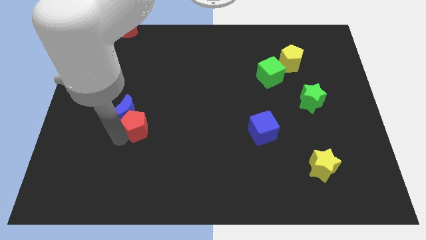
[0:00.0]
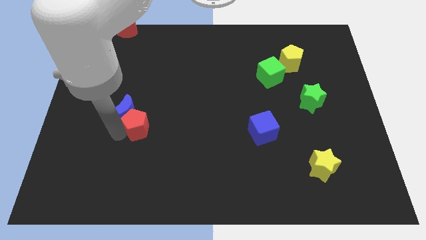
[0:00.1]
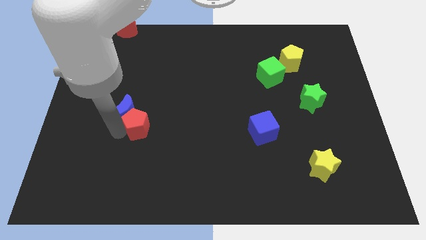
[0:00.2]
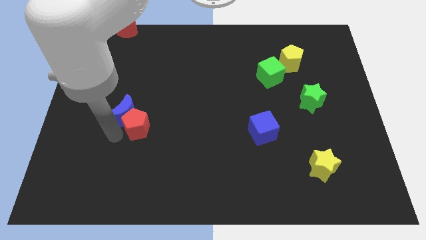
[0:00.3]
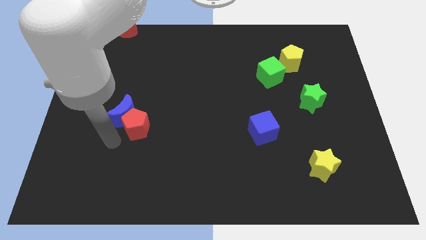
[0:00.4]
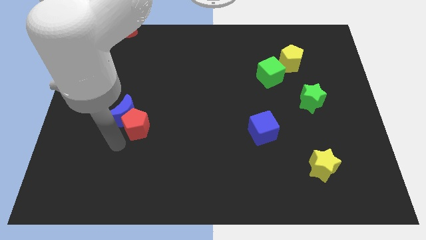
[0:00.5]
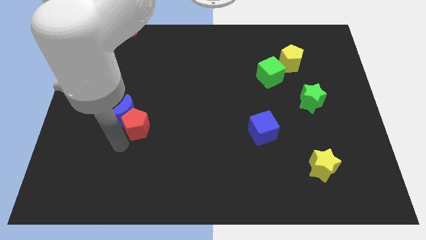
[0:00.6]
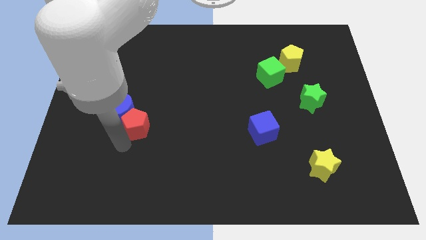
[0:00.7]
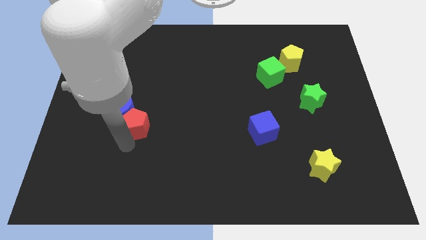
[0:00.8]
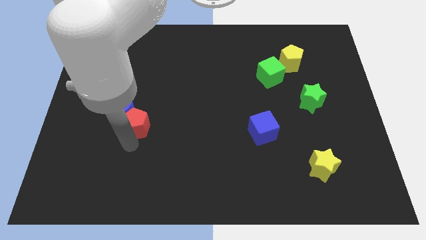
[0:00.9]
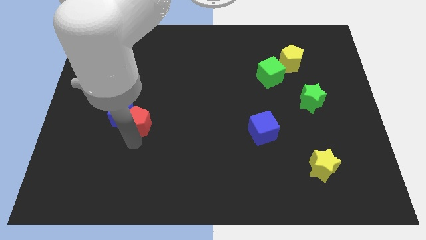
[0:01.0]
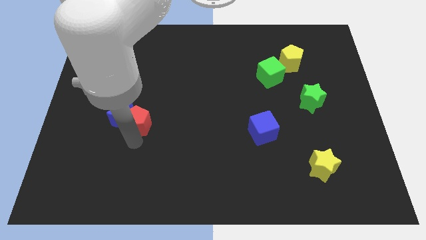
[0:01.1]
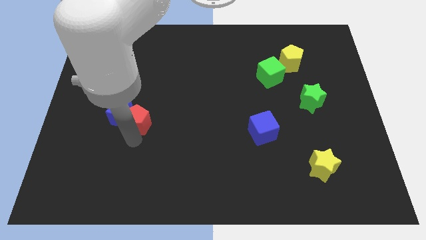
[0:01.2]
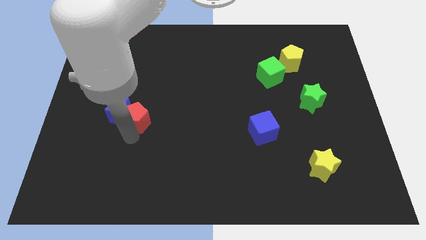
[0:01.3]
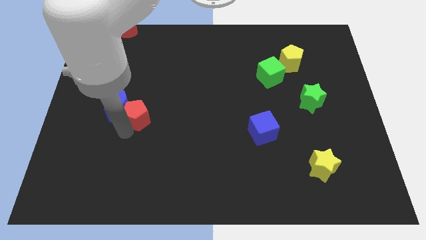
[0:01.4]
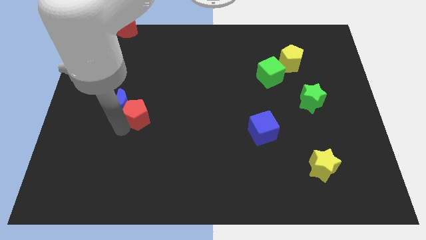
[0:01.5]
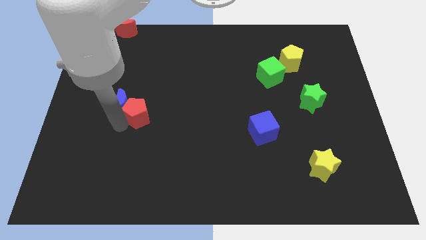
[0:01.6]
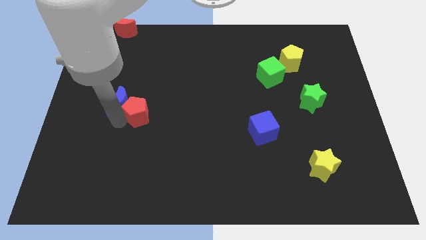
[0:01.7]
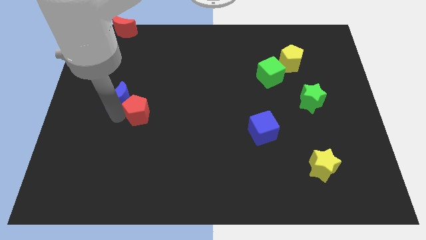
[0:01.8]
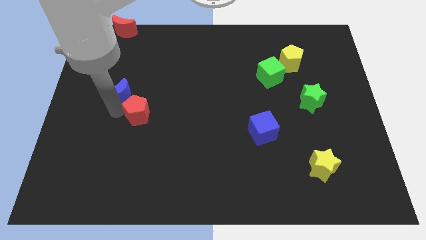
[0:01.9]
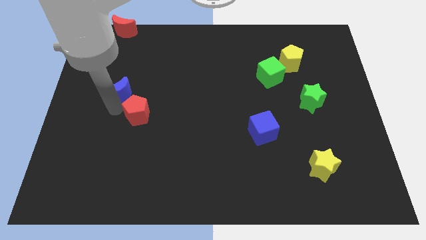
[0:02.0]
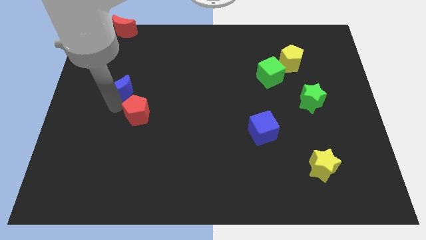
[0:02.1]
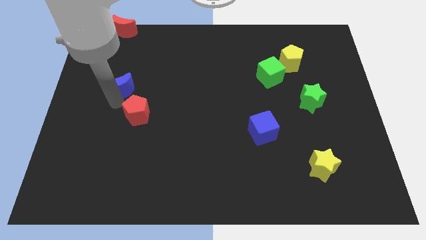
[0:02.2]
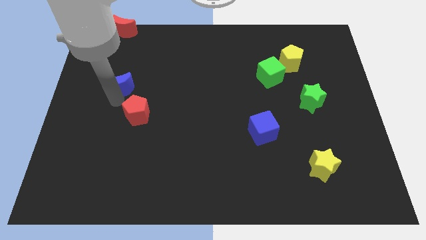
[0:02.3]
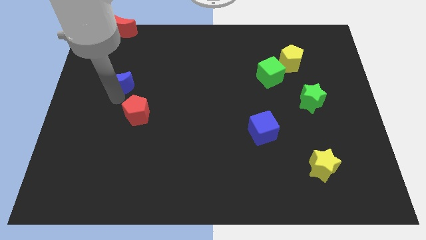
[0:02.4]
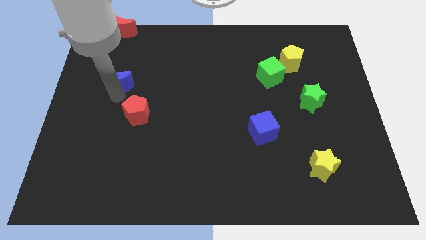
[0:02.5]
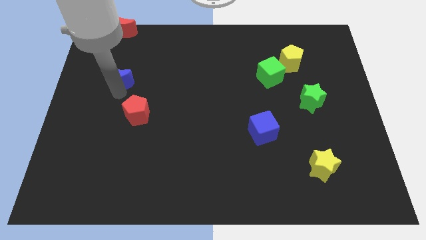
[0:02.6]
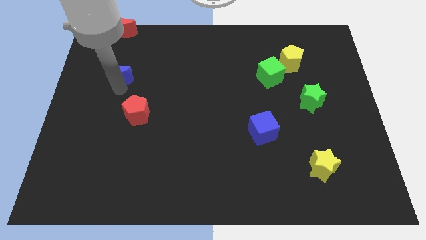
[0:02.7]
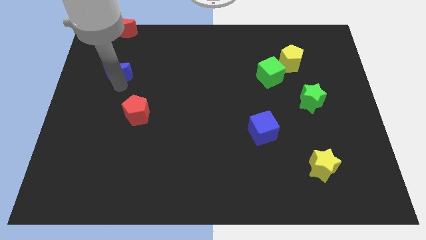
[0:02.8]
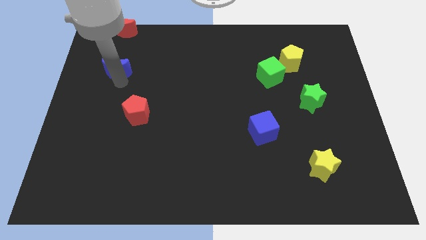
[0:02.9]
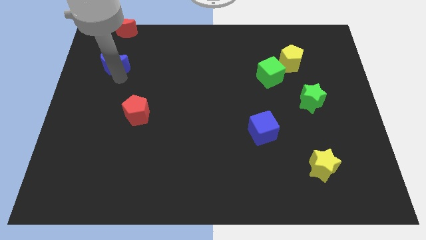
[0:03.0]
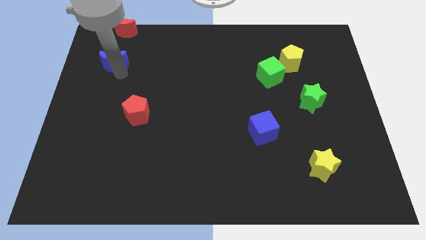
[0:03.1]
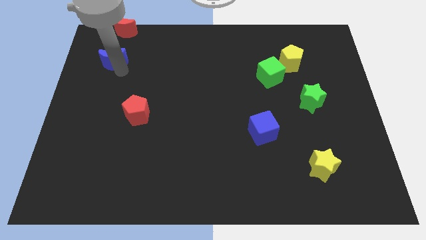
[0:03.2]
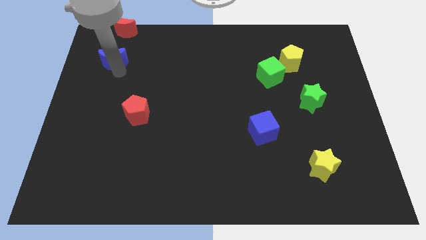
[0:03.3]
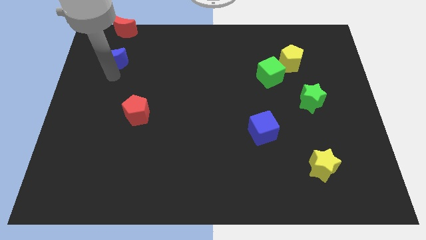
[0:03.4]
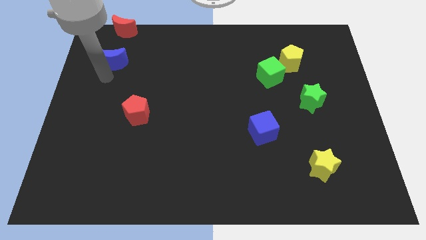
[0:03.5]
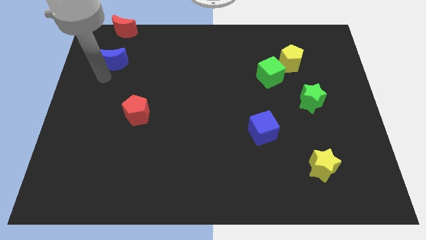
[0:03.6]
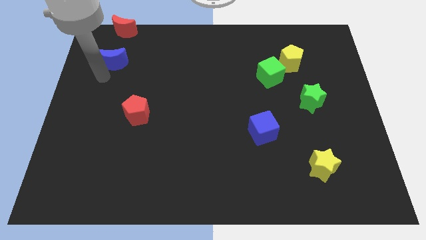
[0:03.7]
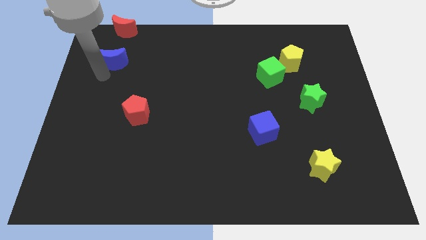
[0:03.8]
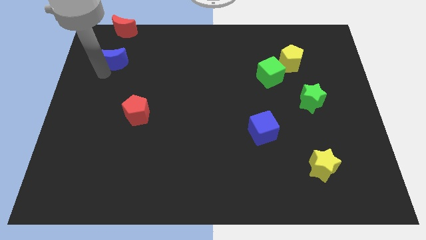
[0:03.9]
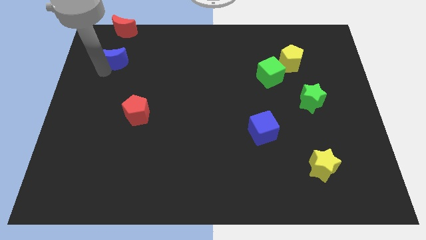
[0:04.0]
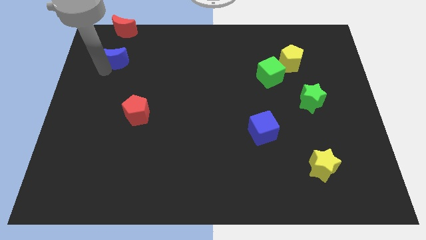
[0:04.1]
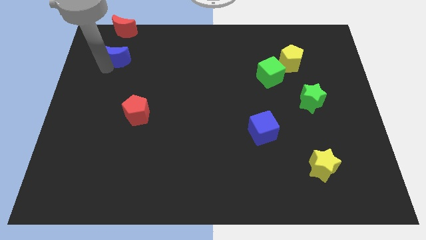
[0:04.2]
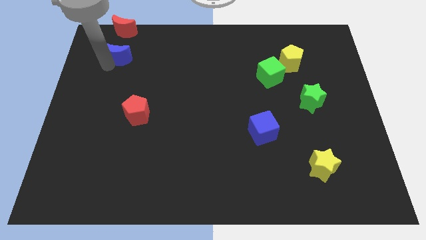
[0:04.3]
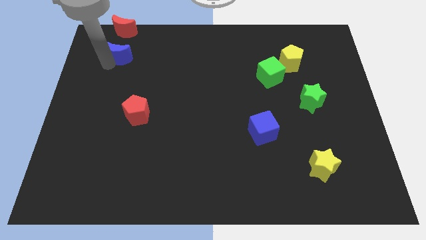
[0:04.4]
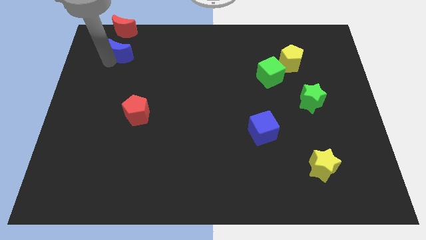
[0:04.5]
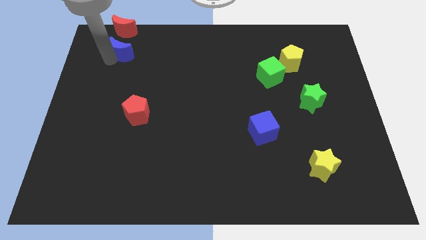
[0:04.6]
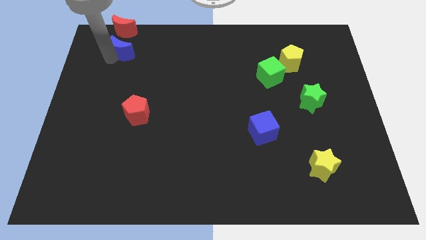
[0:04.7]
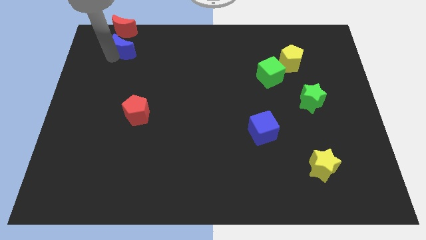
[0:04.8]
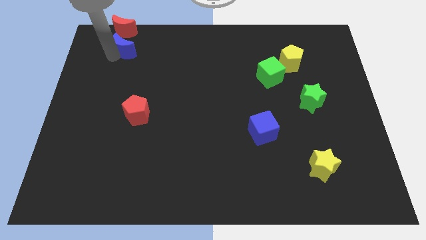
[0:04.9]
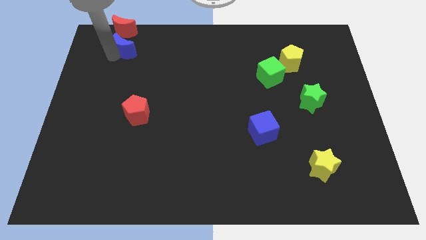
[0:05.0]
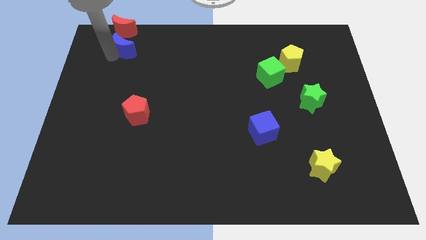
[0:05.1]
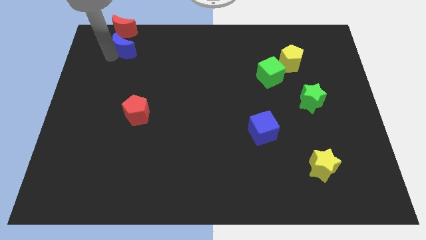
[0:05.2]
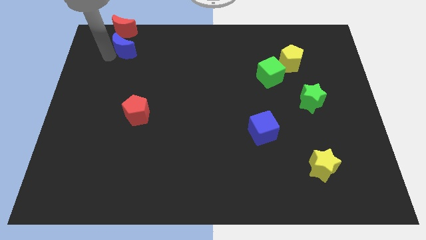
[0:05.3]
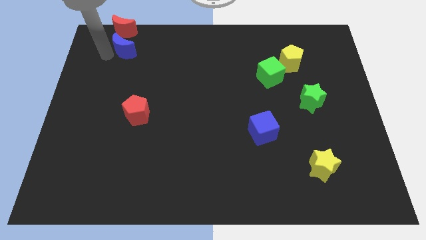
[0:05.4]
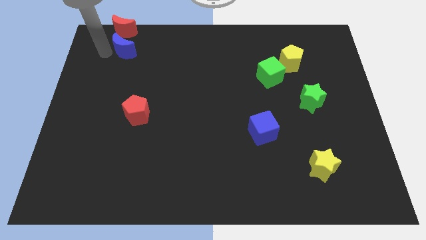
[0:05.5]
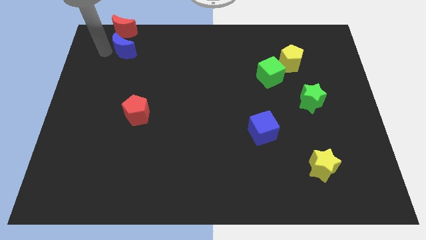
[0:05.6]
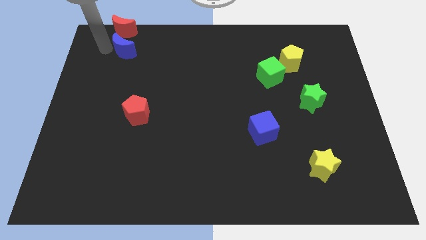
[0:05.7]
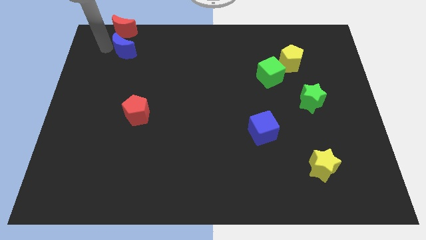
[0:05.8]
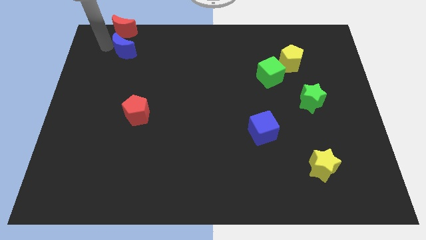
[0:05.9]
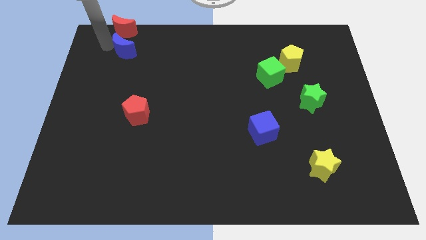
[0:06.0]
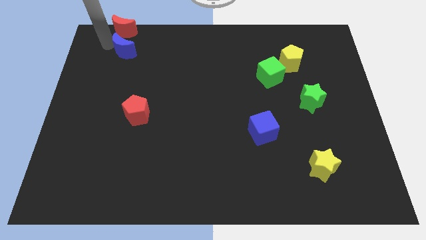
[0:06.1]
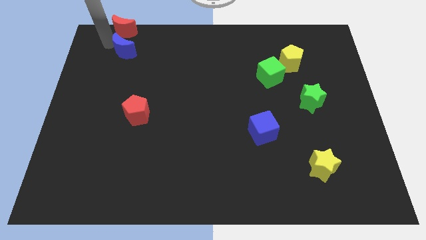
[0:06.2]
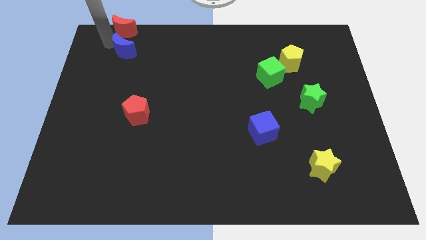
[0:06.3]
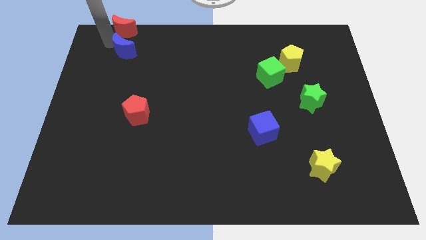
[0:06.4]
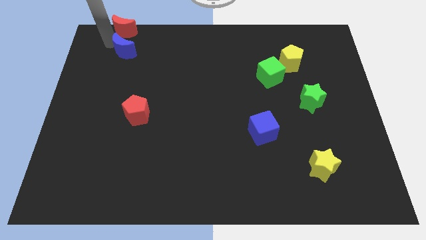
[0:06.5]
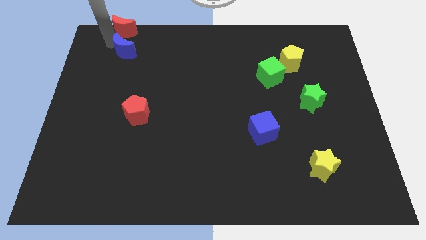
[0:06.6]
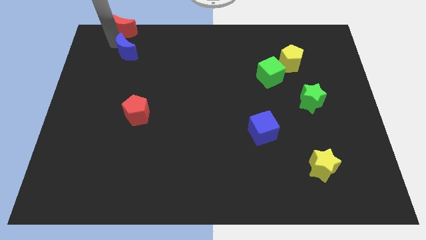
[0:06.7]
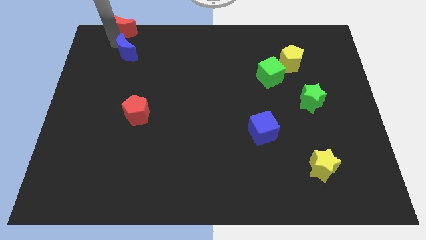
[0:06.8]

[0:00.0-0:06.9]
move blue crescent away from red pentagon

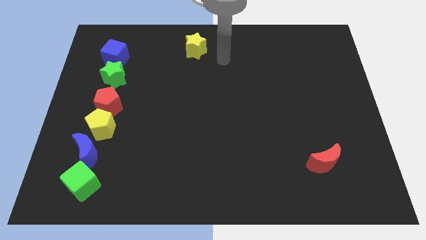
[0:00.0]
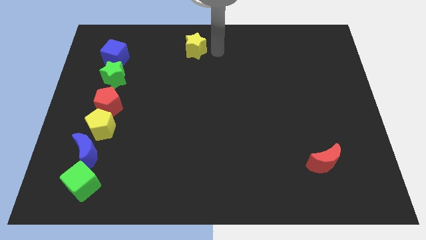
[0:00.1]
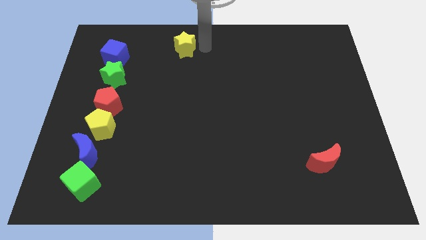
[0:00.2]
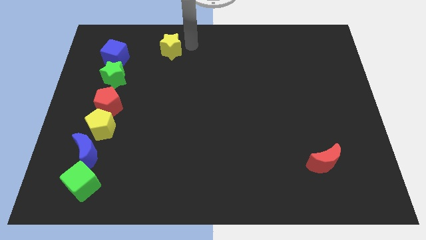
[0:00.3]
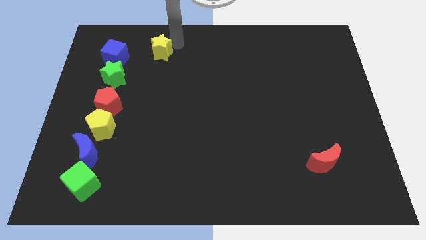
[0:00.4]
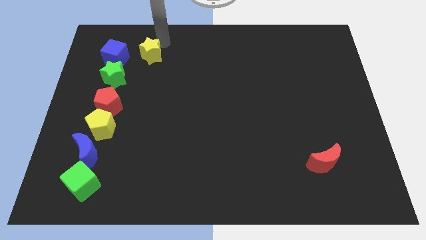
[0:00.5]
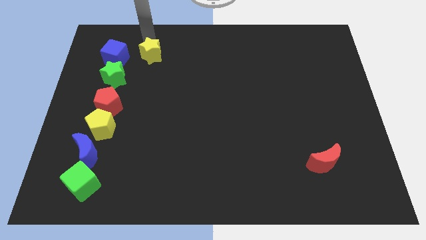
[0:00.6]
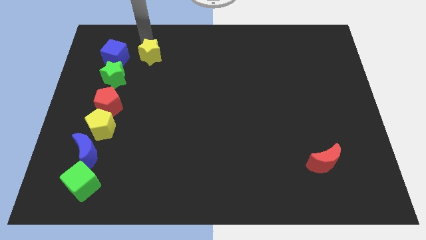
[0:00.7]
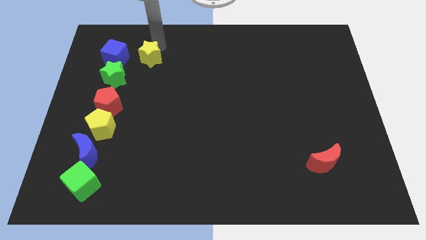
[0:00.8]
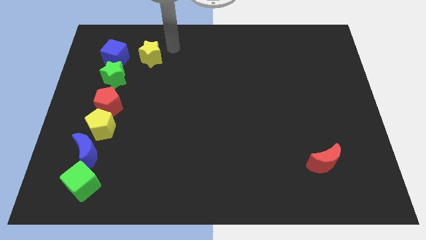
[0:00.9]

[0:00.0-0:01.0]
move the yellow star to the right of the blue cube

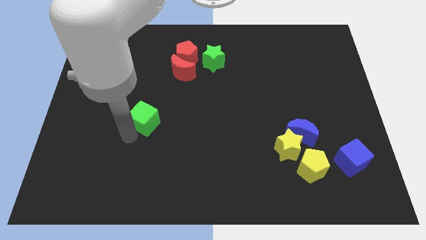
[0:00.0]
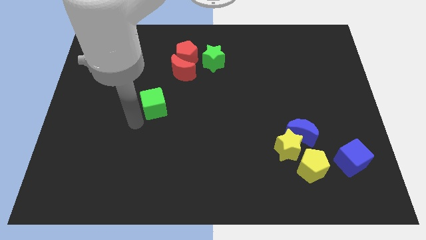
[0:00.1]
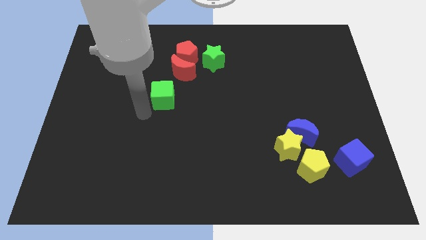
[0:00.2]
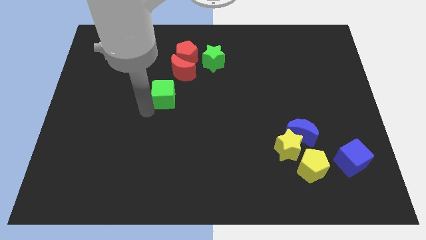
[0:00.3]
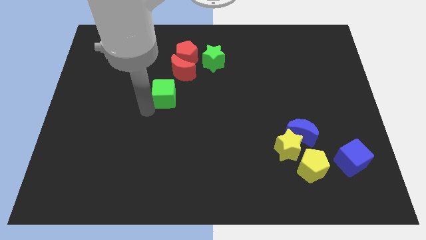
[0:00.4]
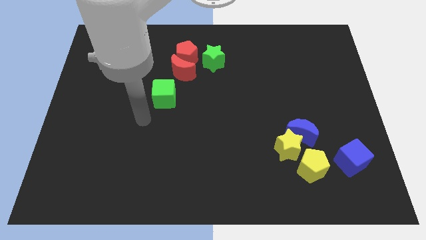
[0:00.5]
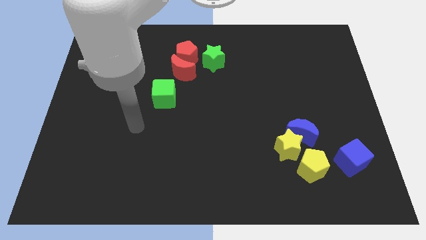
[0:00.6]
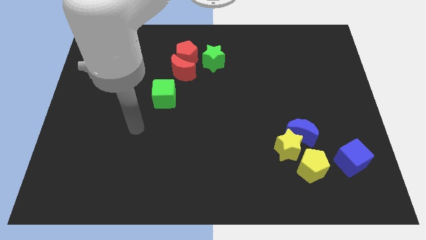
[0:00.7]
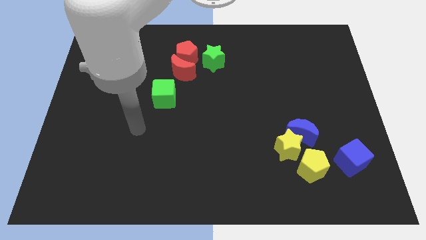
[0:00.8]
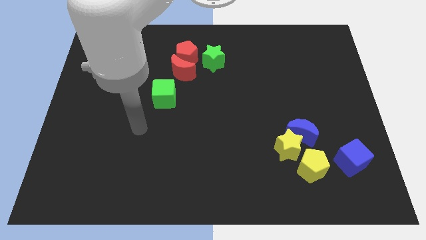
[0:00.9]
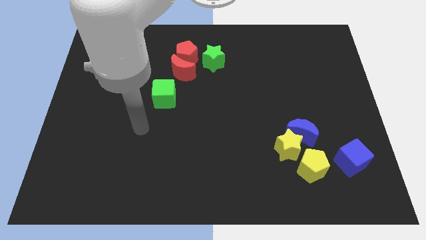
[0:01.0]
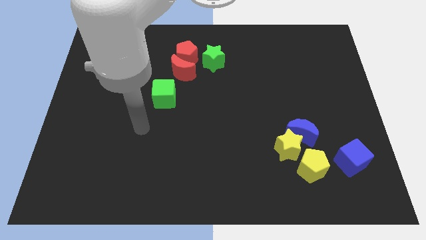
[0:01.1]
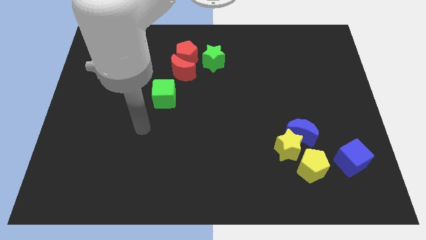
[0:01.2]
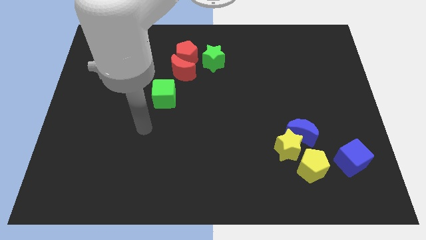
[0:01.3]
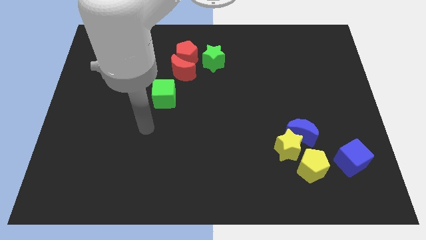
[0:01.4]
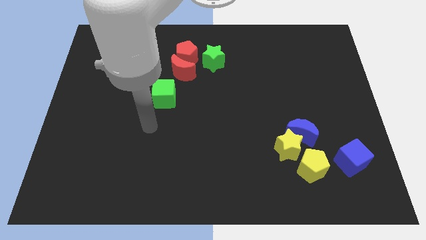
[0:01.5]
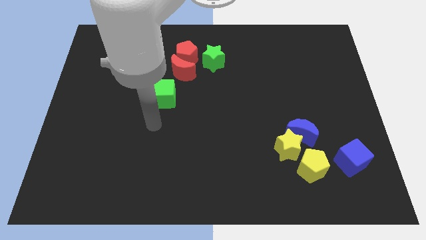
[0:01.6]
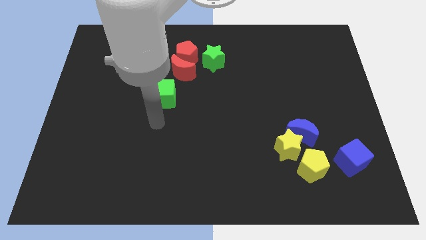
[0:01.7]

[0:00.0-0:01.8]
slide the green cube close to the red blocks
